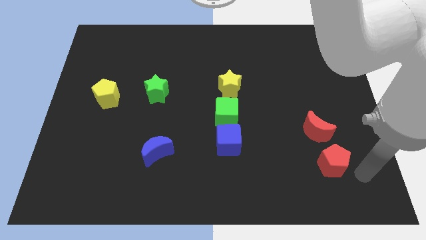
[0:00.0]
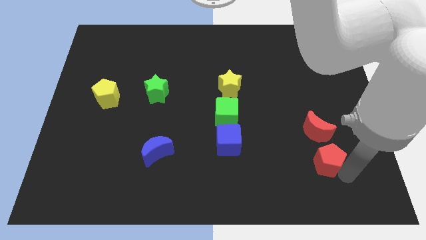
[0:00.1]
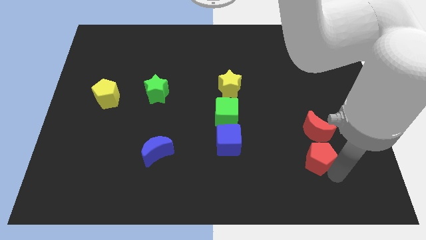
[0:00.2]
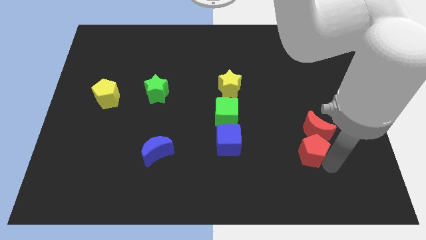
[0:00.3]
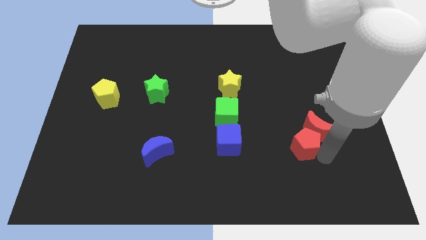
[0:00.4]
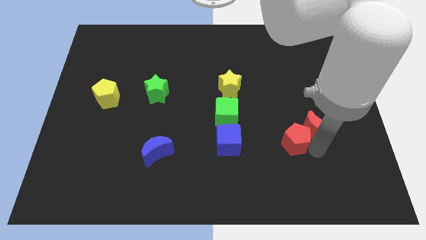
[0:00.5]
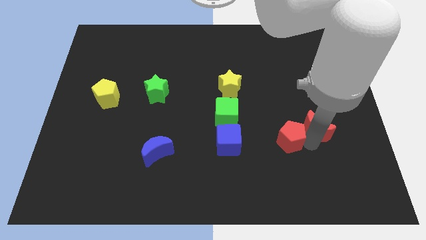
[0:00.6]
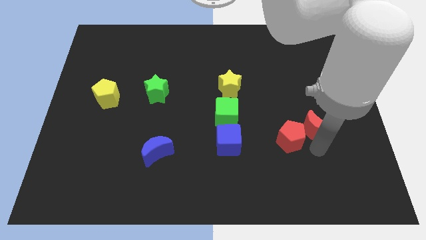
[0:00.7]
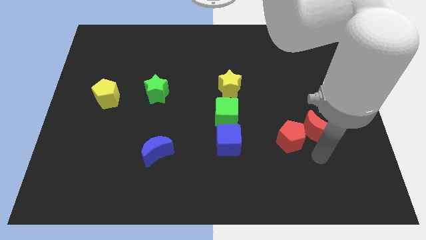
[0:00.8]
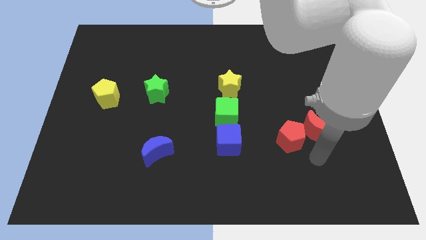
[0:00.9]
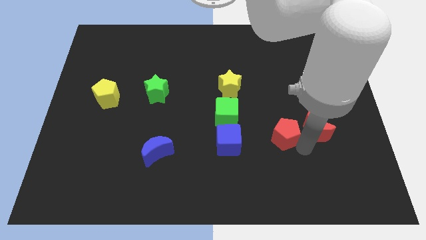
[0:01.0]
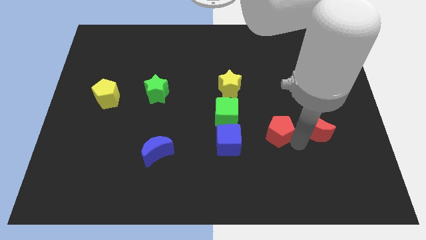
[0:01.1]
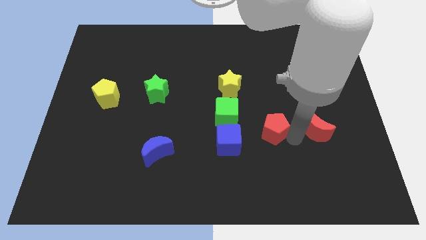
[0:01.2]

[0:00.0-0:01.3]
place red pentagon to the left of red moon

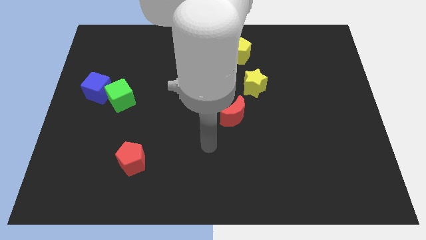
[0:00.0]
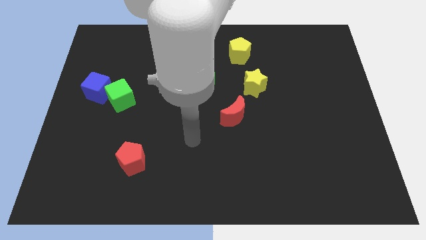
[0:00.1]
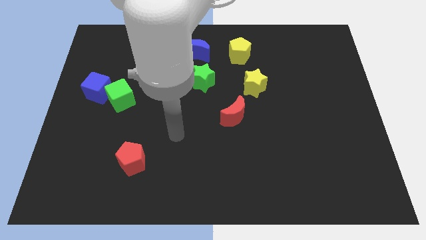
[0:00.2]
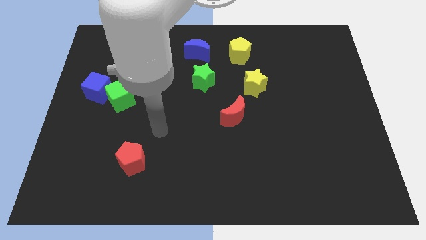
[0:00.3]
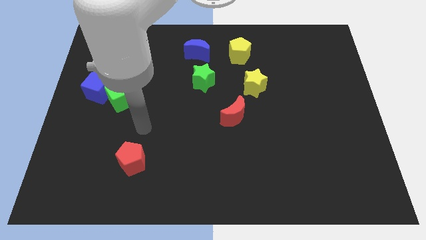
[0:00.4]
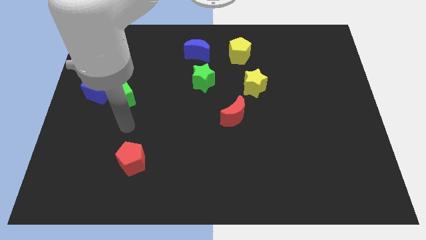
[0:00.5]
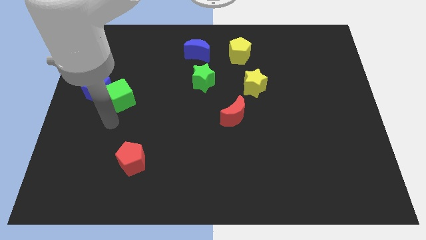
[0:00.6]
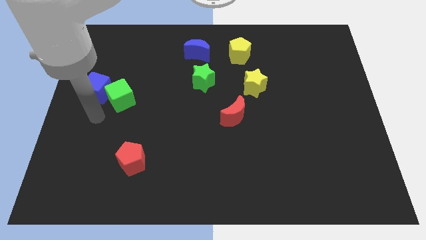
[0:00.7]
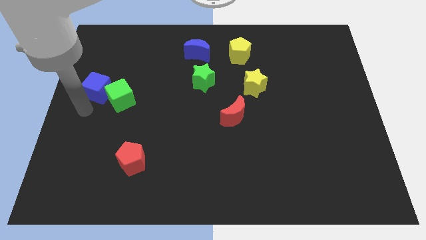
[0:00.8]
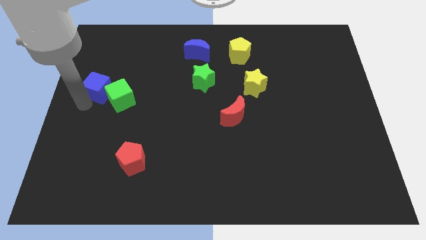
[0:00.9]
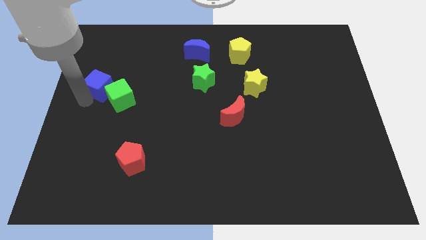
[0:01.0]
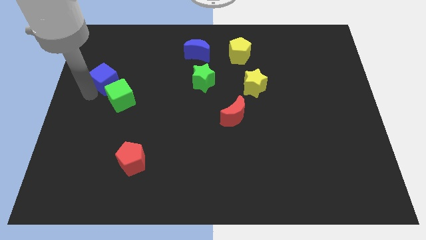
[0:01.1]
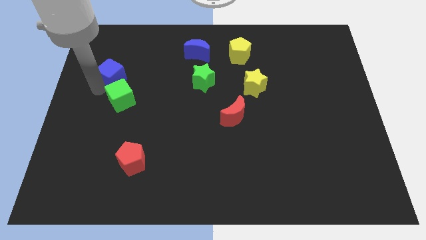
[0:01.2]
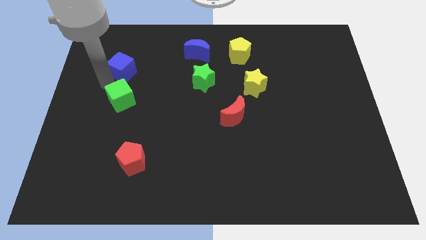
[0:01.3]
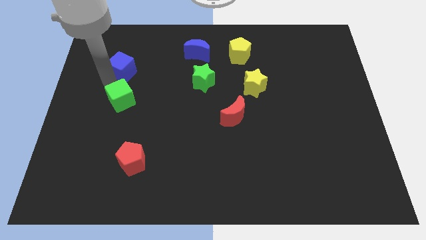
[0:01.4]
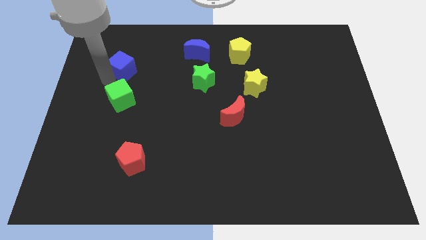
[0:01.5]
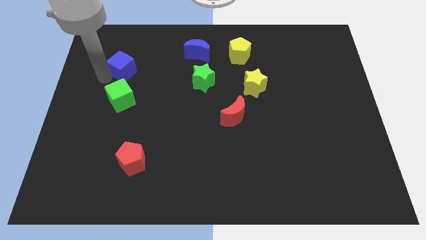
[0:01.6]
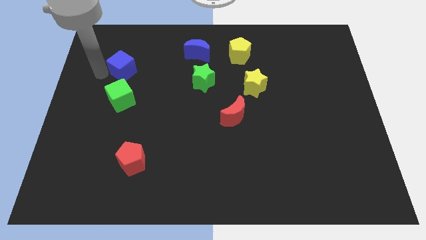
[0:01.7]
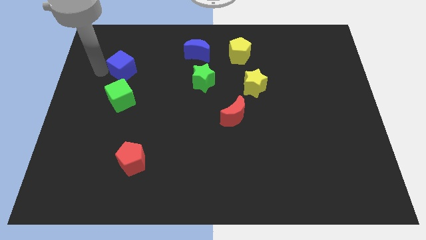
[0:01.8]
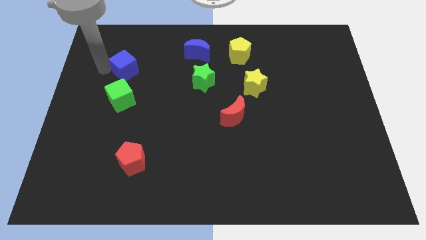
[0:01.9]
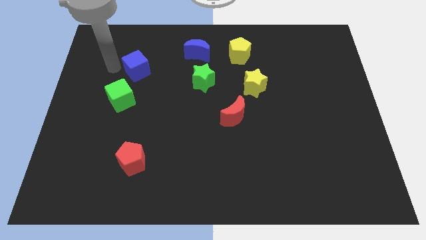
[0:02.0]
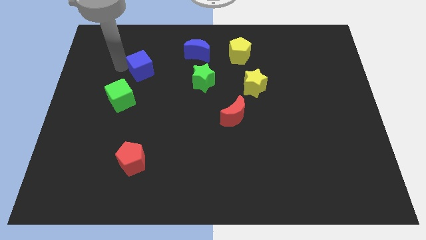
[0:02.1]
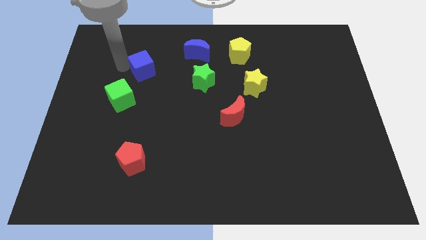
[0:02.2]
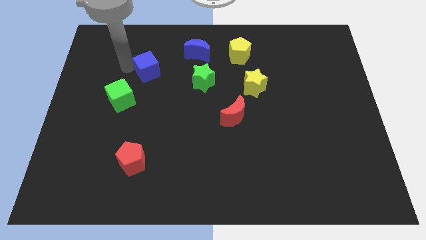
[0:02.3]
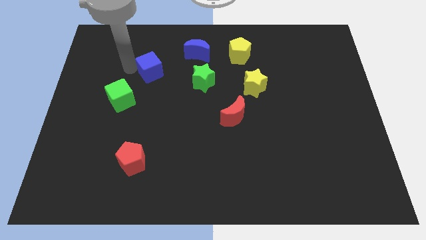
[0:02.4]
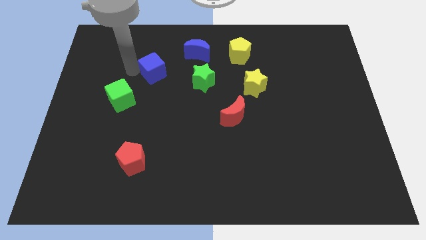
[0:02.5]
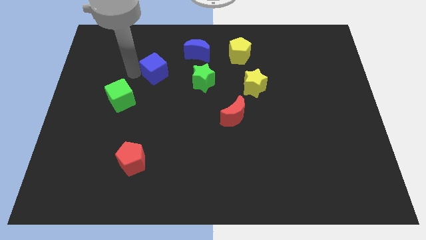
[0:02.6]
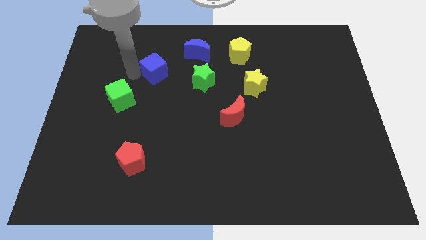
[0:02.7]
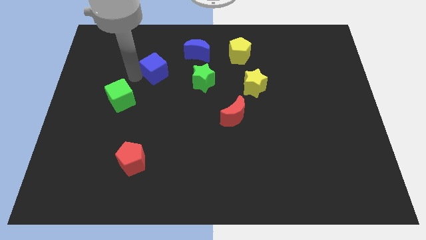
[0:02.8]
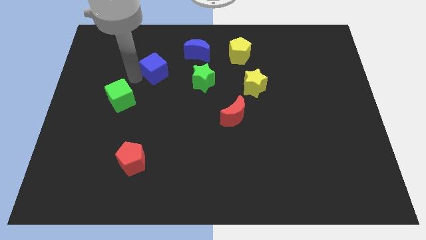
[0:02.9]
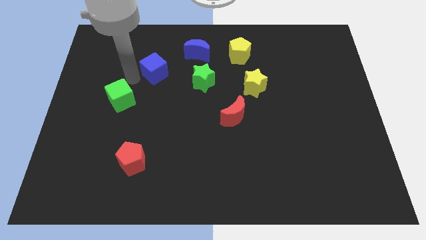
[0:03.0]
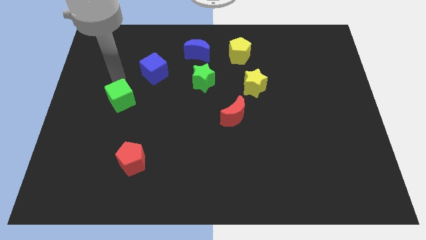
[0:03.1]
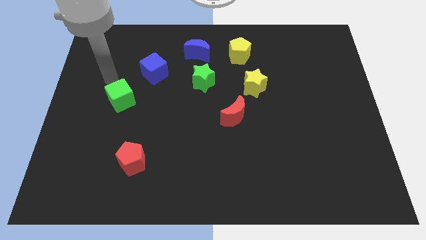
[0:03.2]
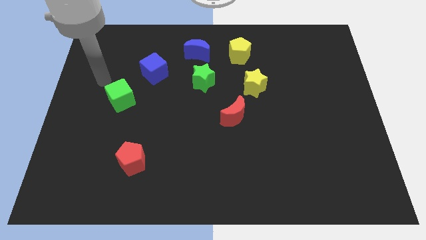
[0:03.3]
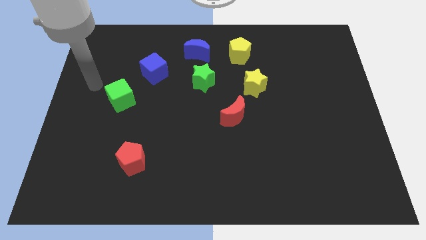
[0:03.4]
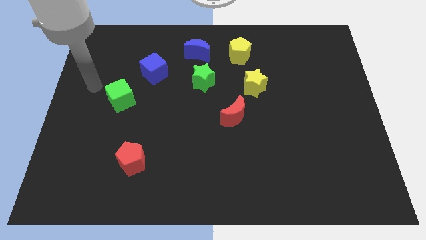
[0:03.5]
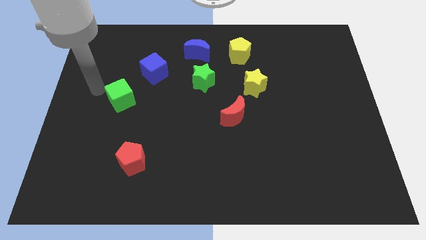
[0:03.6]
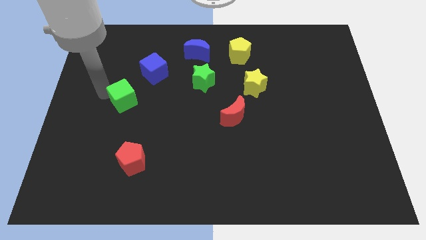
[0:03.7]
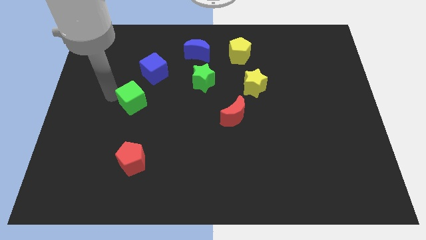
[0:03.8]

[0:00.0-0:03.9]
place the blue cube to the top right side of the green cube

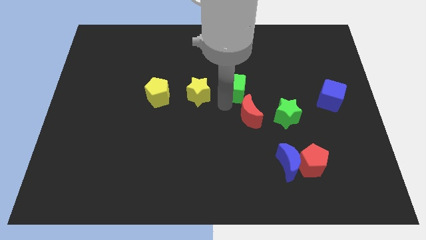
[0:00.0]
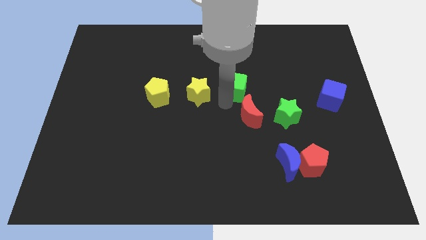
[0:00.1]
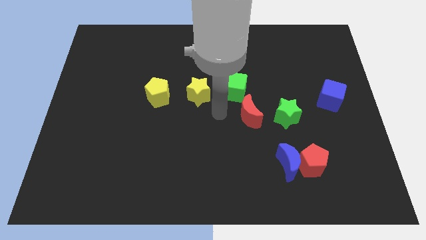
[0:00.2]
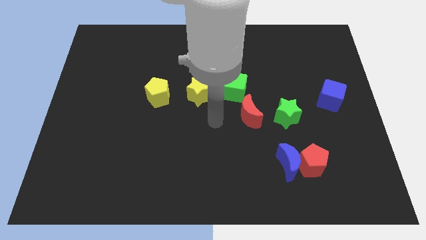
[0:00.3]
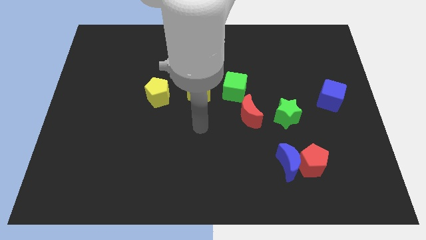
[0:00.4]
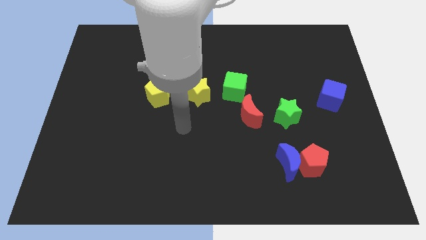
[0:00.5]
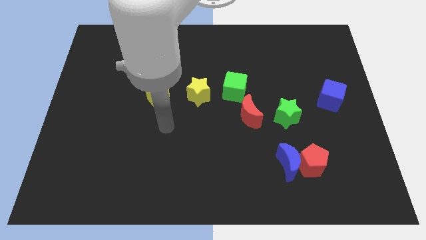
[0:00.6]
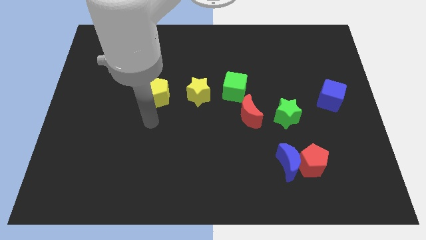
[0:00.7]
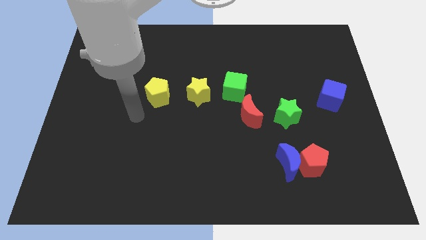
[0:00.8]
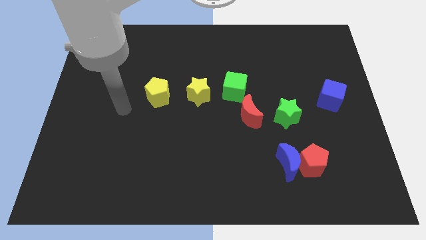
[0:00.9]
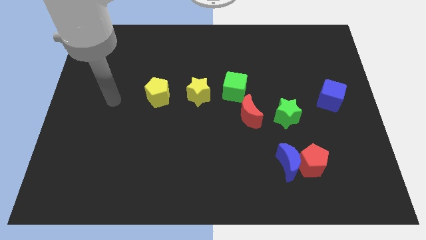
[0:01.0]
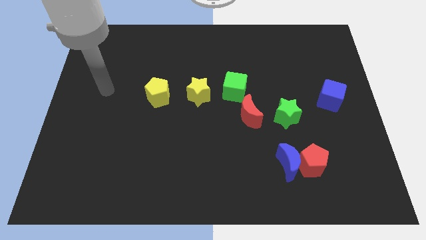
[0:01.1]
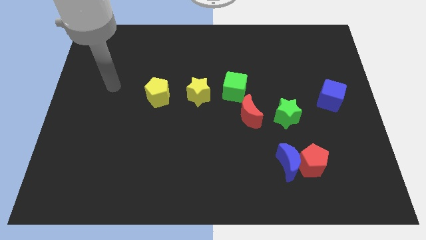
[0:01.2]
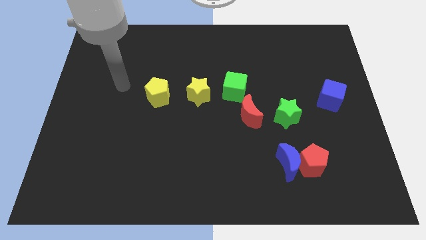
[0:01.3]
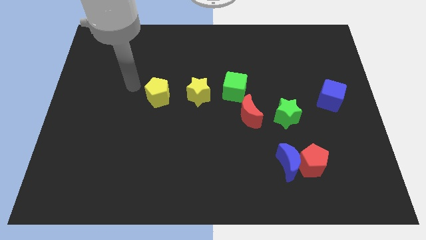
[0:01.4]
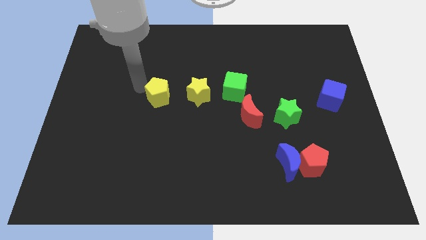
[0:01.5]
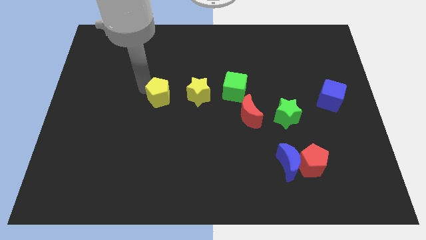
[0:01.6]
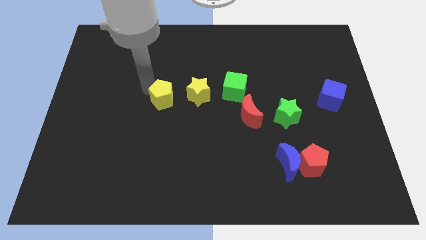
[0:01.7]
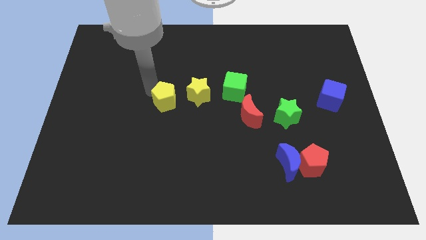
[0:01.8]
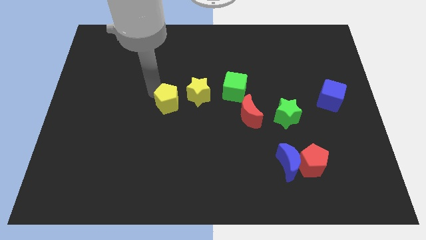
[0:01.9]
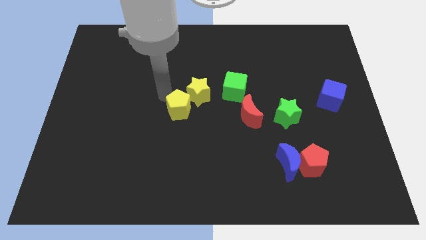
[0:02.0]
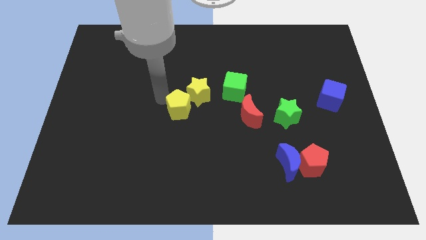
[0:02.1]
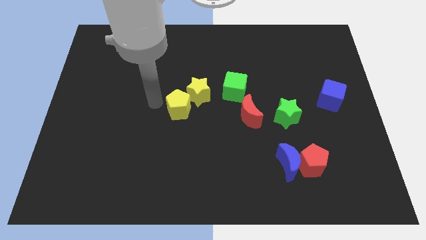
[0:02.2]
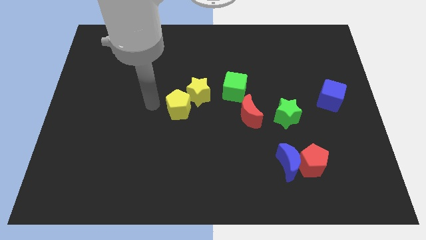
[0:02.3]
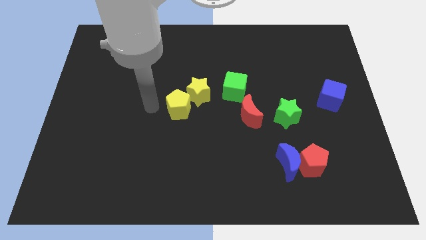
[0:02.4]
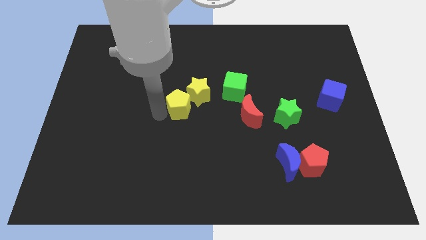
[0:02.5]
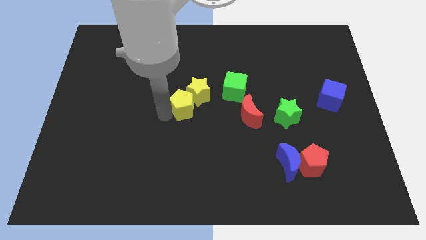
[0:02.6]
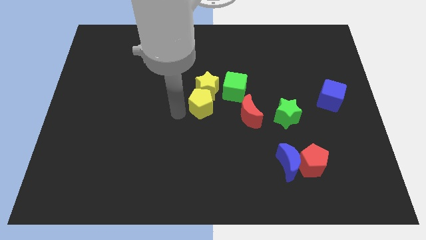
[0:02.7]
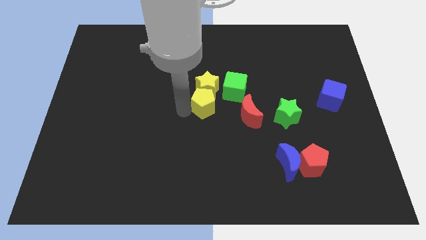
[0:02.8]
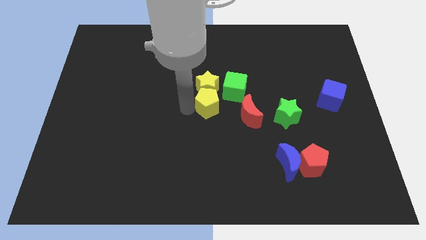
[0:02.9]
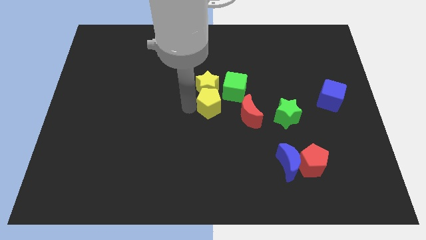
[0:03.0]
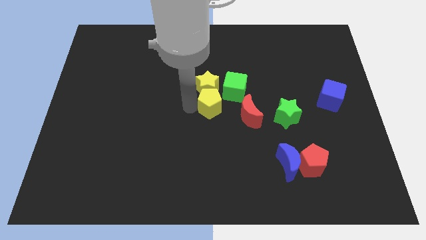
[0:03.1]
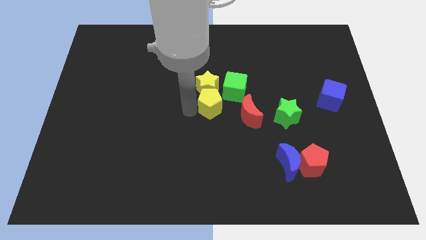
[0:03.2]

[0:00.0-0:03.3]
place the yellow pentagon below the yellow star

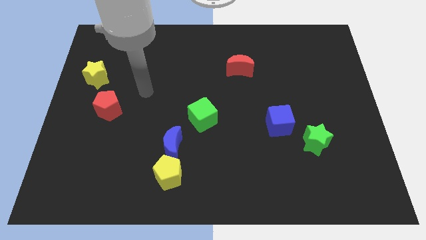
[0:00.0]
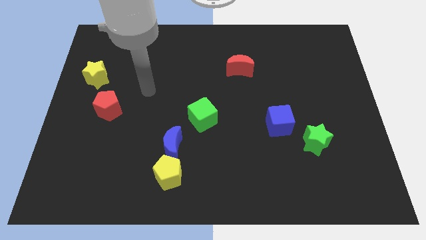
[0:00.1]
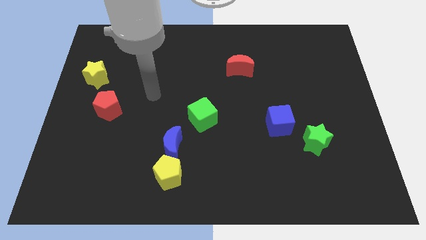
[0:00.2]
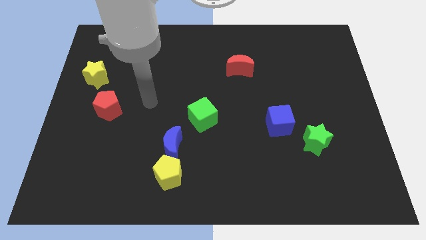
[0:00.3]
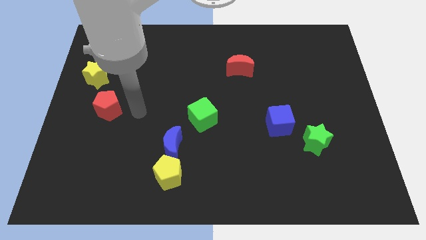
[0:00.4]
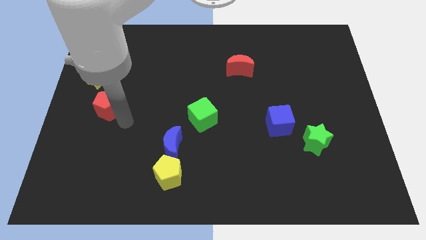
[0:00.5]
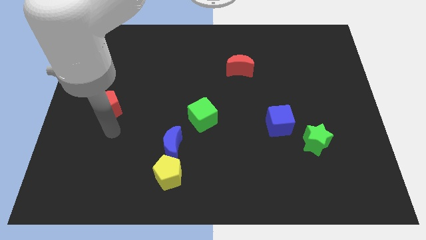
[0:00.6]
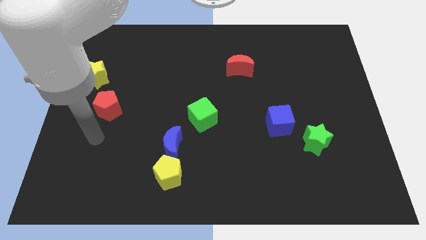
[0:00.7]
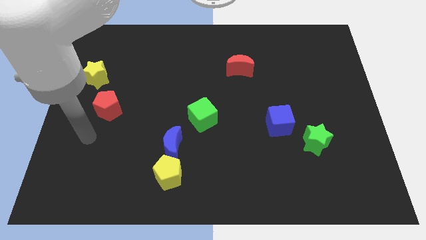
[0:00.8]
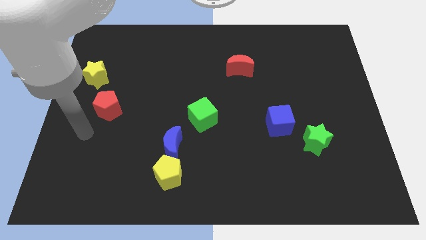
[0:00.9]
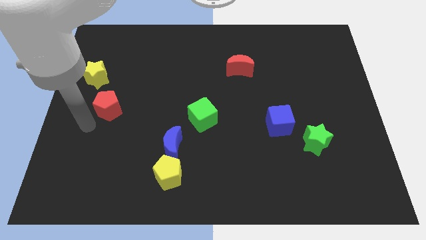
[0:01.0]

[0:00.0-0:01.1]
point your arm at the bottom left side of red pentagon
